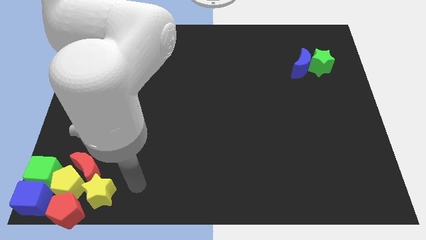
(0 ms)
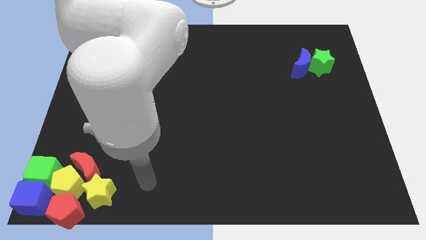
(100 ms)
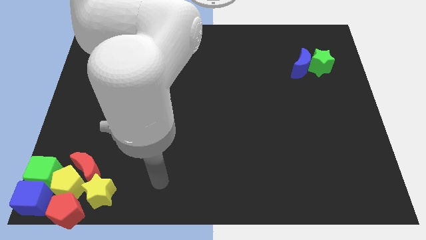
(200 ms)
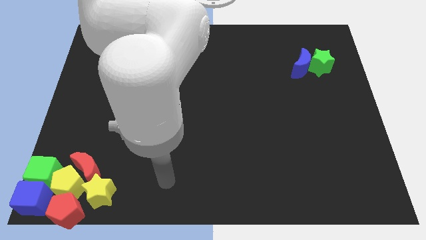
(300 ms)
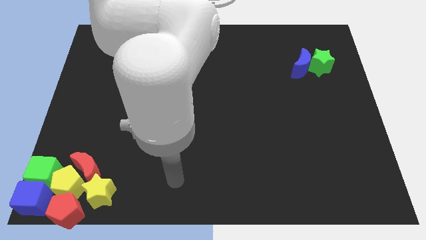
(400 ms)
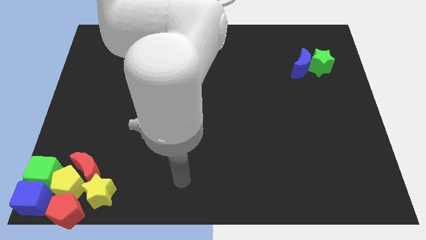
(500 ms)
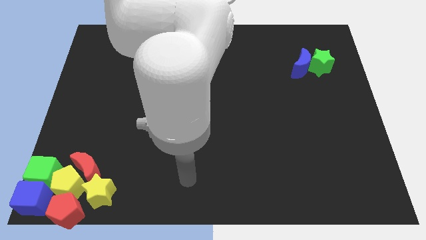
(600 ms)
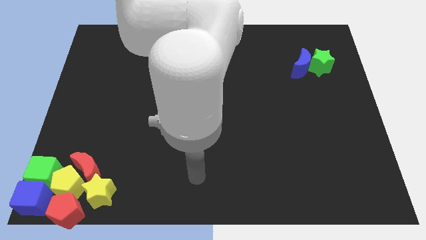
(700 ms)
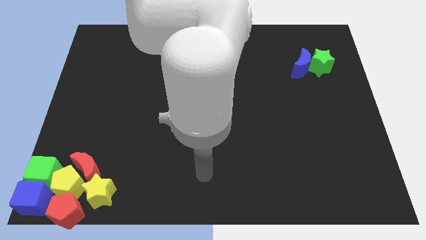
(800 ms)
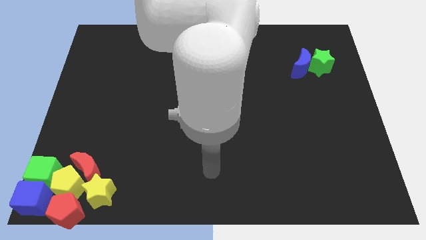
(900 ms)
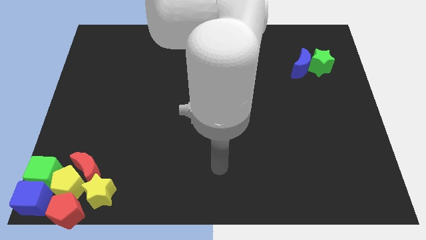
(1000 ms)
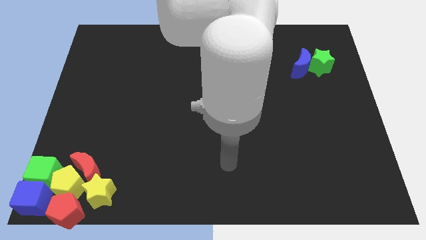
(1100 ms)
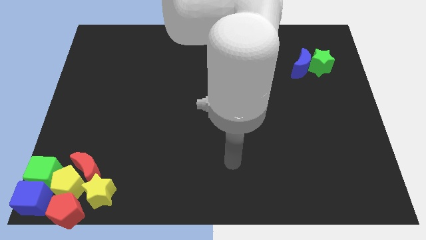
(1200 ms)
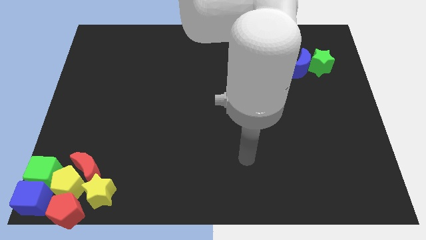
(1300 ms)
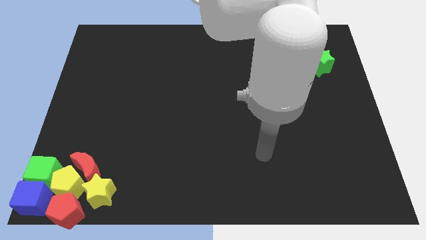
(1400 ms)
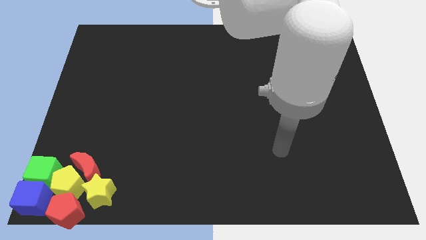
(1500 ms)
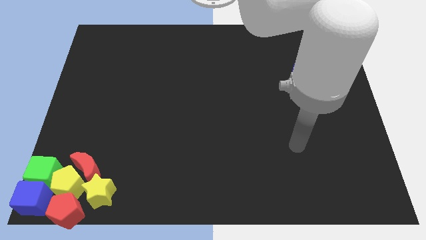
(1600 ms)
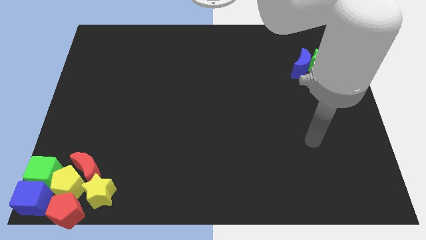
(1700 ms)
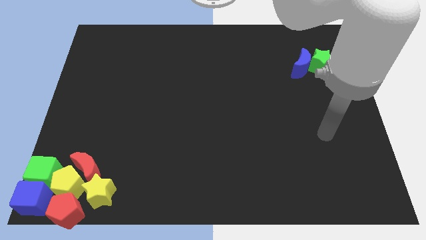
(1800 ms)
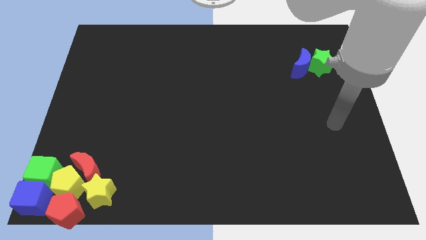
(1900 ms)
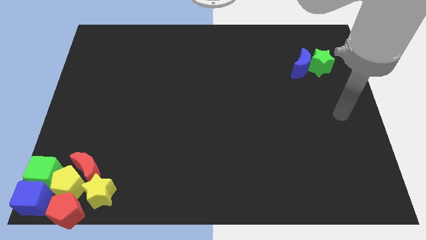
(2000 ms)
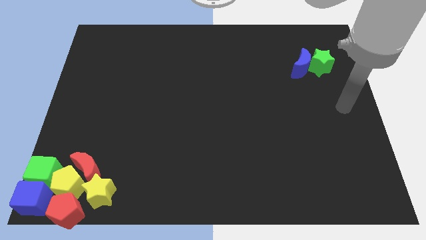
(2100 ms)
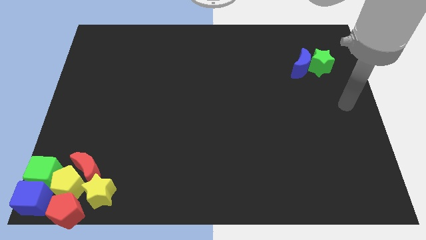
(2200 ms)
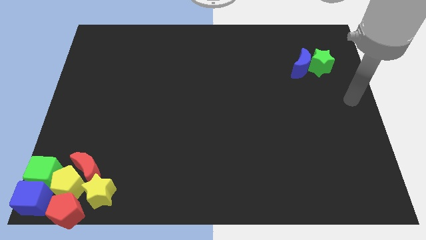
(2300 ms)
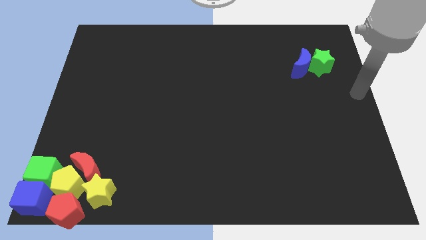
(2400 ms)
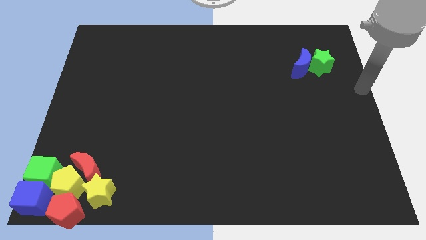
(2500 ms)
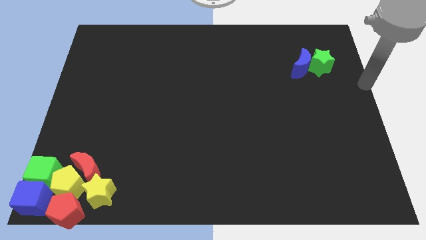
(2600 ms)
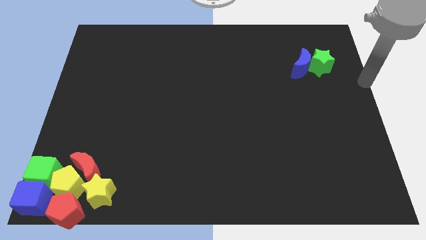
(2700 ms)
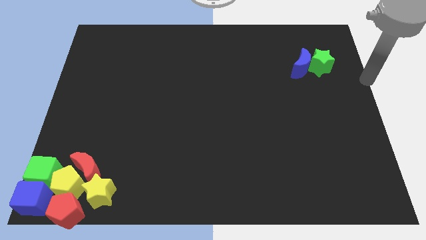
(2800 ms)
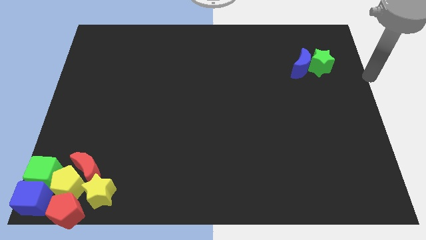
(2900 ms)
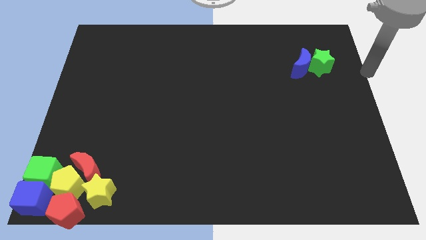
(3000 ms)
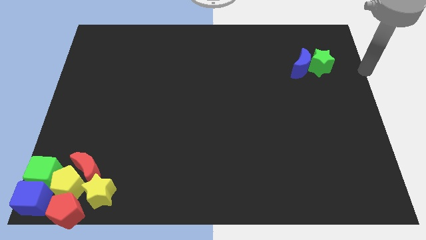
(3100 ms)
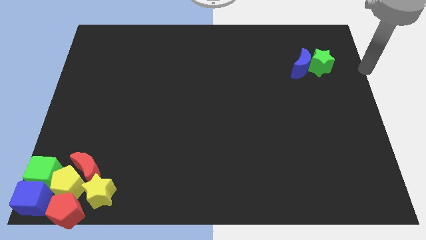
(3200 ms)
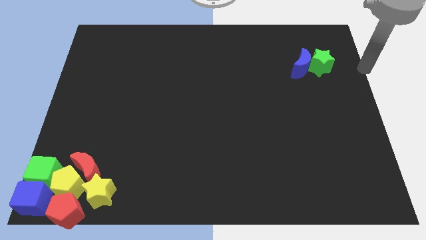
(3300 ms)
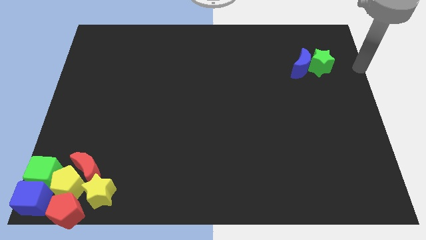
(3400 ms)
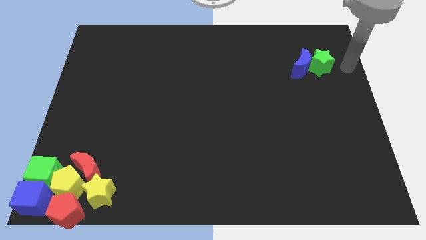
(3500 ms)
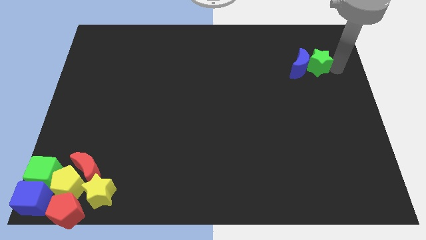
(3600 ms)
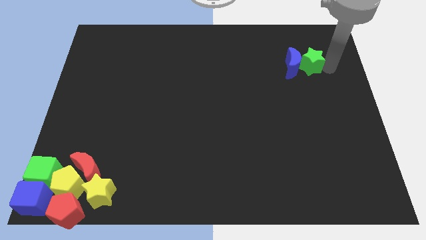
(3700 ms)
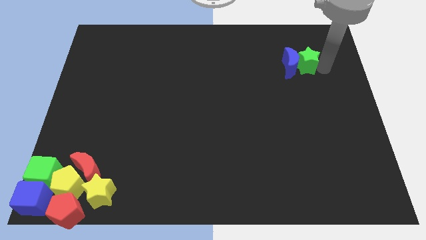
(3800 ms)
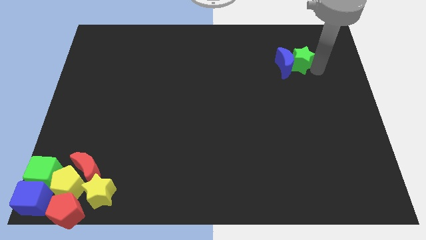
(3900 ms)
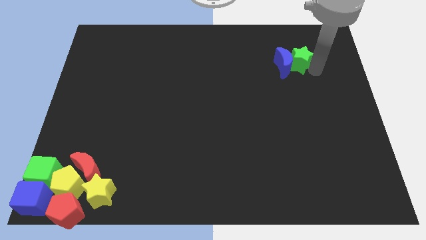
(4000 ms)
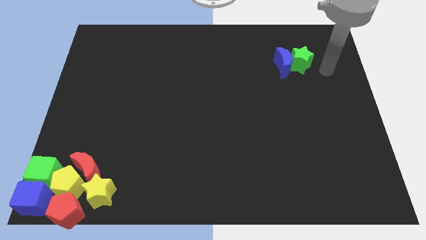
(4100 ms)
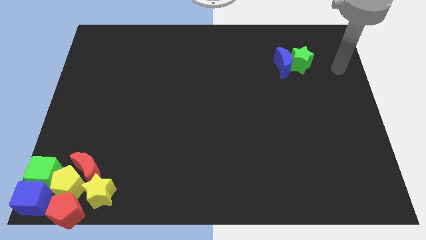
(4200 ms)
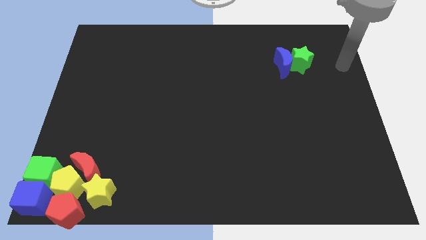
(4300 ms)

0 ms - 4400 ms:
push the green star to the right of the blue crescent

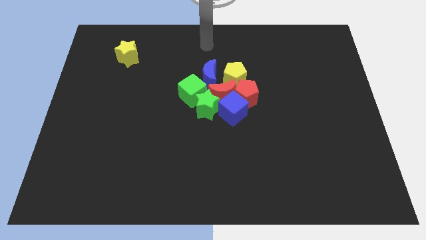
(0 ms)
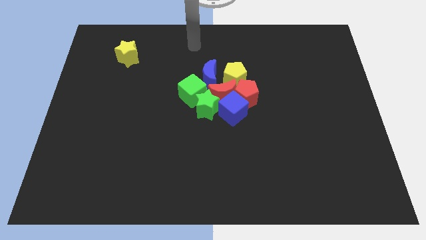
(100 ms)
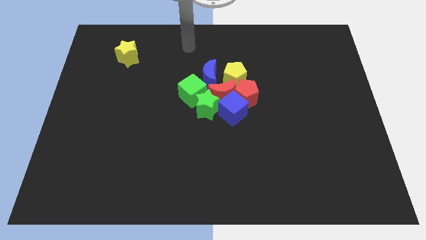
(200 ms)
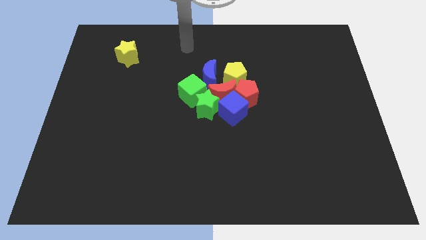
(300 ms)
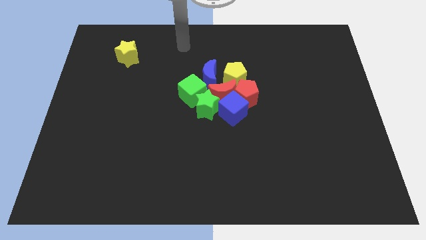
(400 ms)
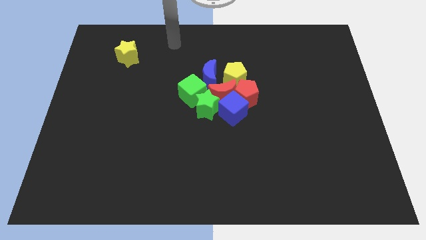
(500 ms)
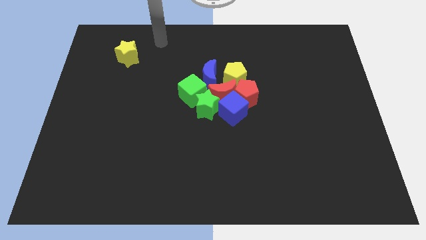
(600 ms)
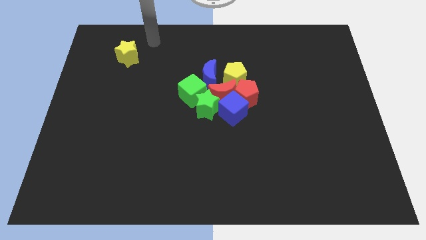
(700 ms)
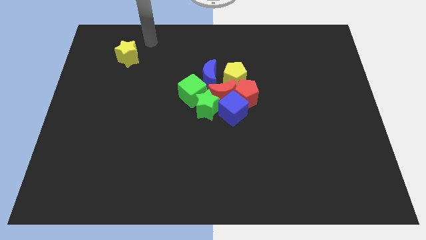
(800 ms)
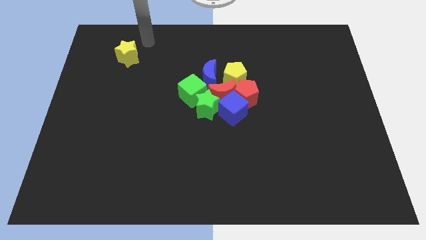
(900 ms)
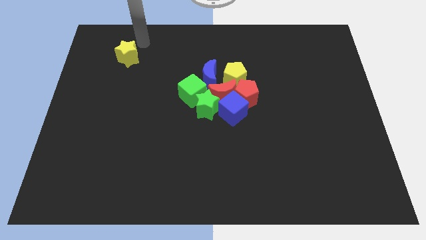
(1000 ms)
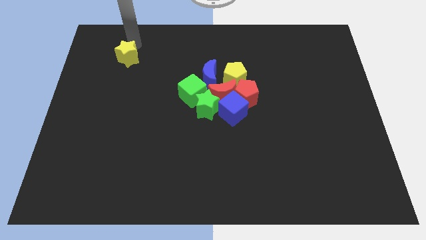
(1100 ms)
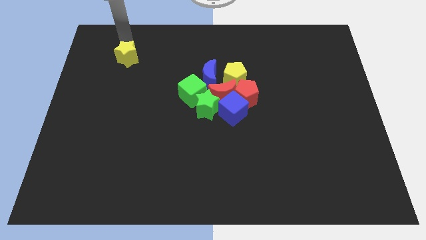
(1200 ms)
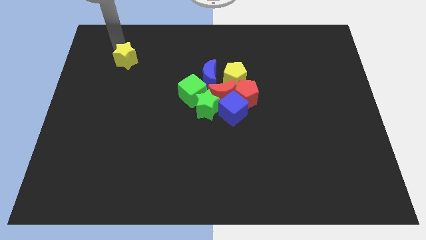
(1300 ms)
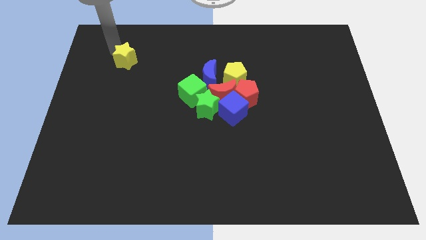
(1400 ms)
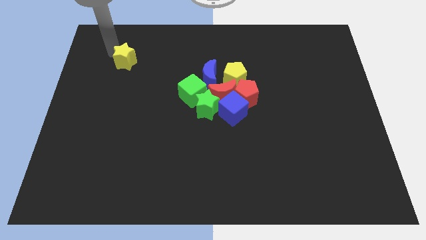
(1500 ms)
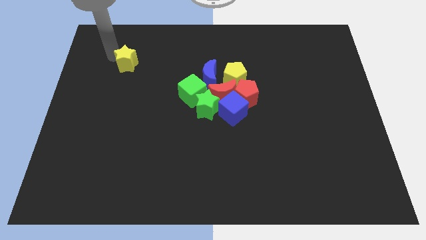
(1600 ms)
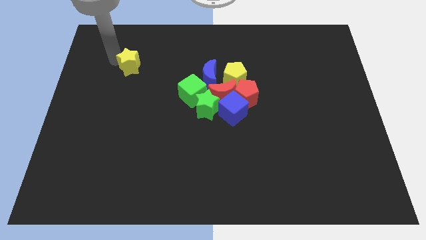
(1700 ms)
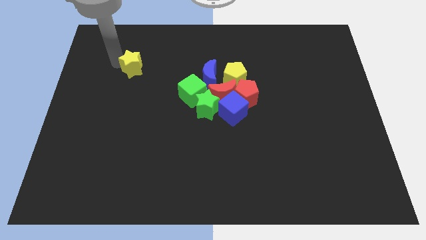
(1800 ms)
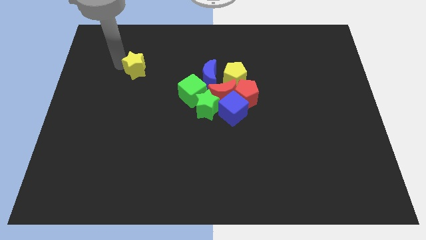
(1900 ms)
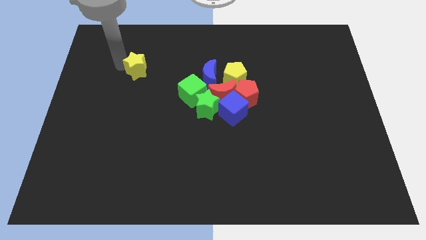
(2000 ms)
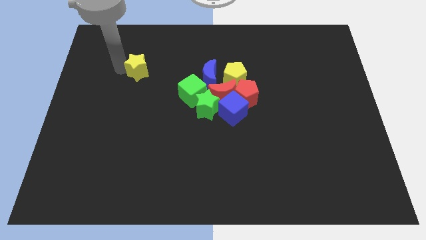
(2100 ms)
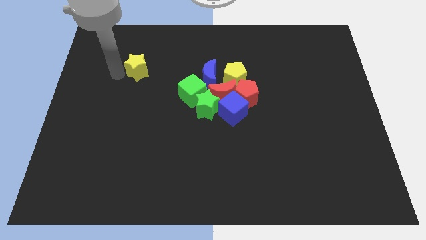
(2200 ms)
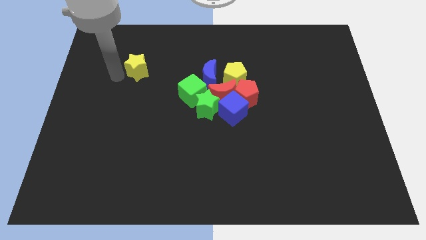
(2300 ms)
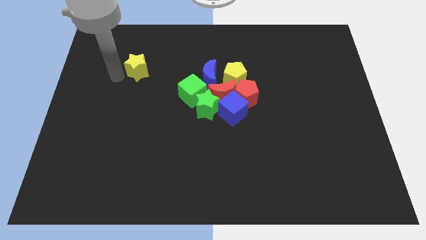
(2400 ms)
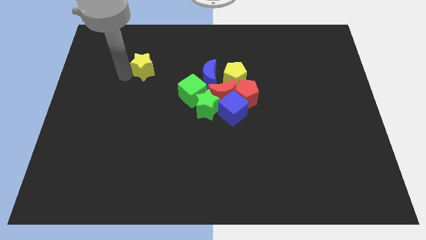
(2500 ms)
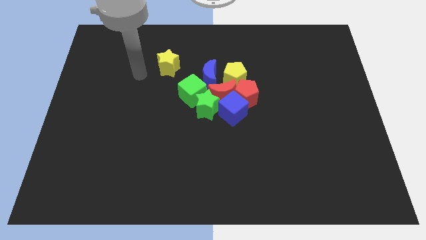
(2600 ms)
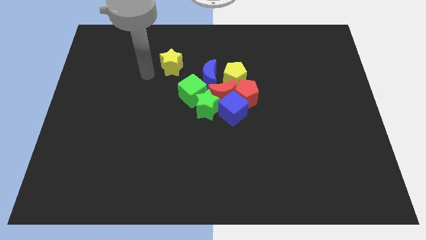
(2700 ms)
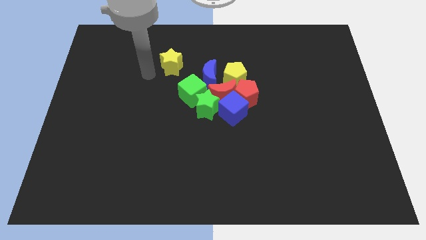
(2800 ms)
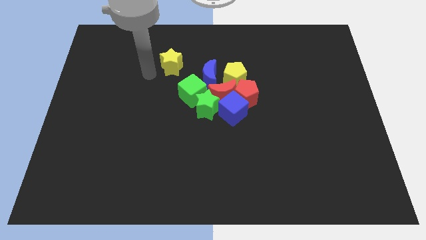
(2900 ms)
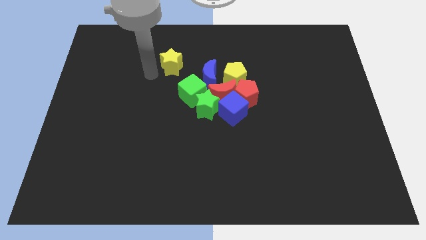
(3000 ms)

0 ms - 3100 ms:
push the yellow star towards the group of blocks

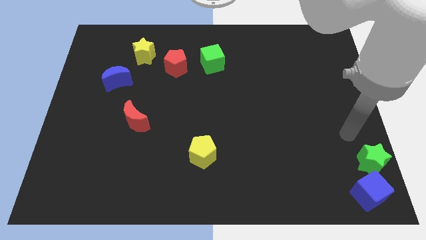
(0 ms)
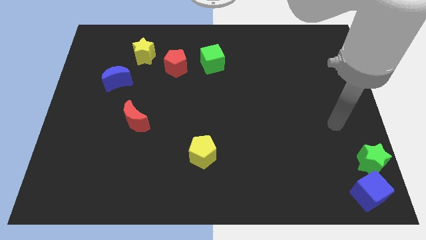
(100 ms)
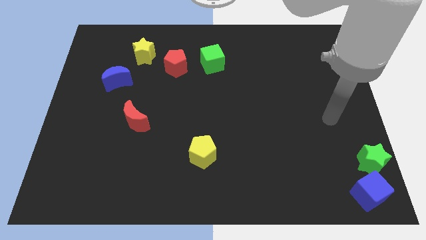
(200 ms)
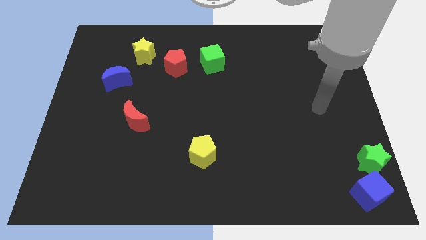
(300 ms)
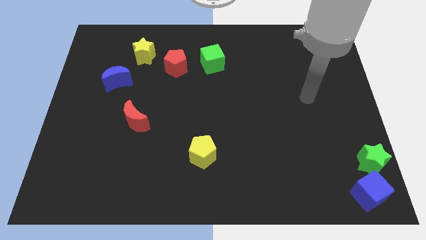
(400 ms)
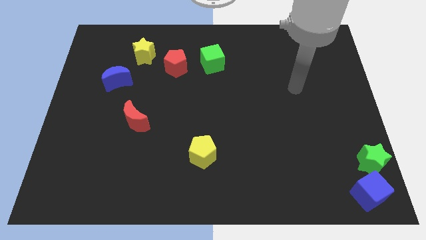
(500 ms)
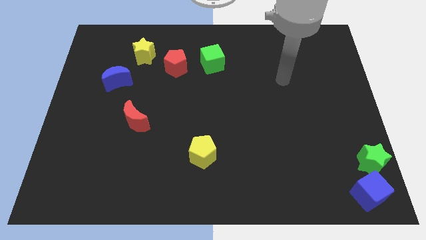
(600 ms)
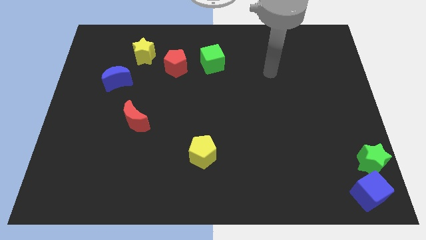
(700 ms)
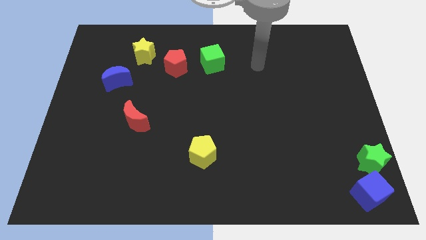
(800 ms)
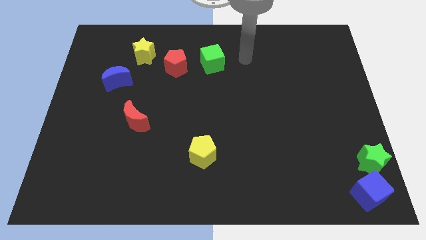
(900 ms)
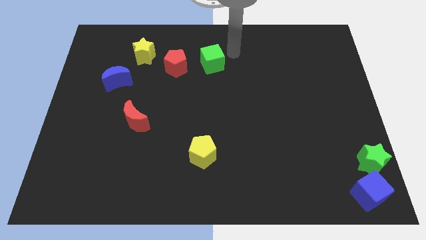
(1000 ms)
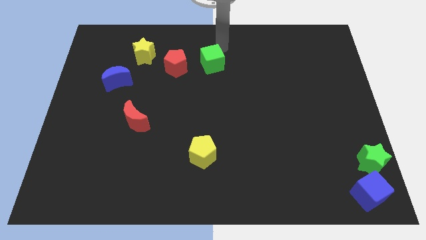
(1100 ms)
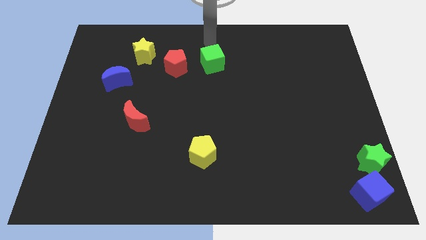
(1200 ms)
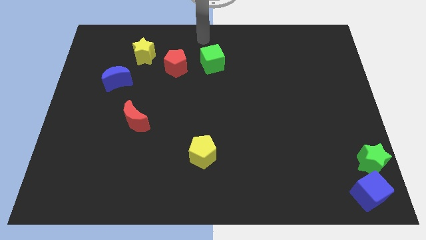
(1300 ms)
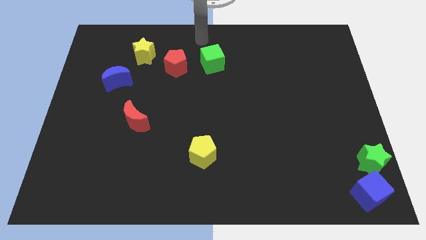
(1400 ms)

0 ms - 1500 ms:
point your arm at the top of the green cube
